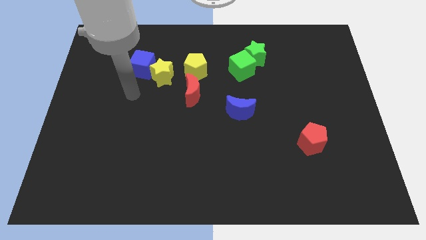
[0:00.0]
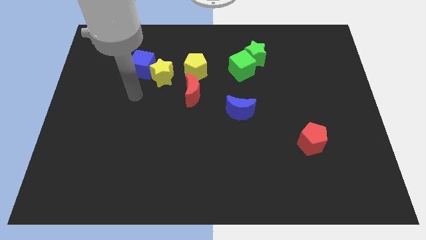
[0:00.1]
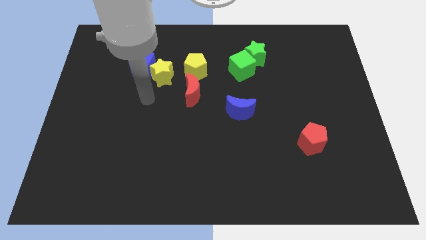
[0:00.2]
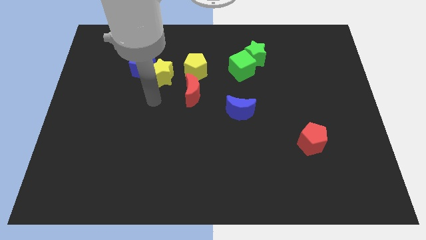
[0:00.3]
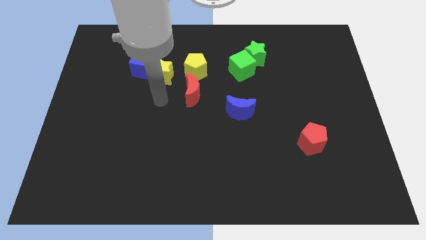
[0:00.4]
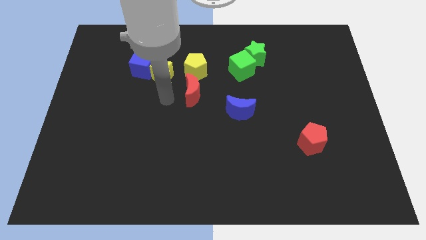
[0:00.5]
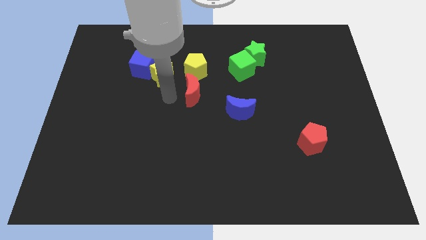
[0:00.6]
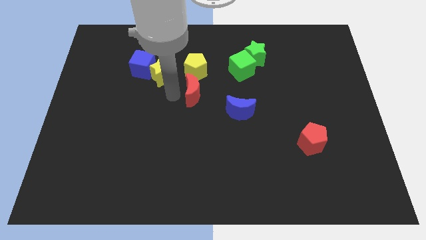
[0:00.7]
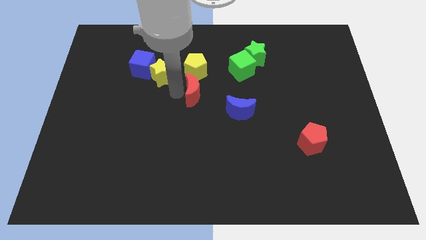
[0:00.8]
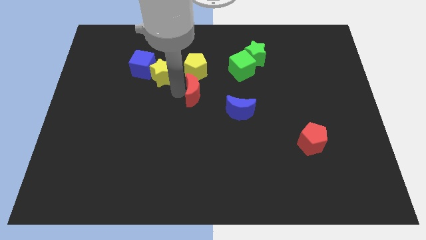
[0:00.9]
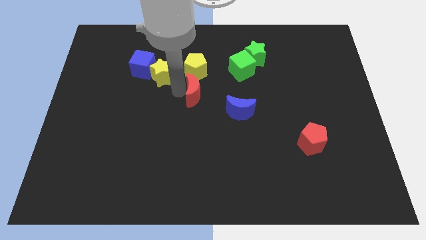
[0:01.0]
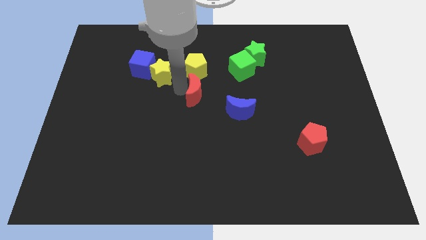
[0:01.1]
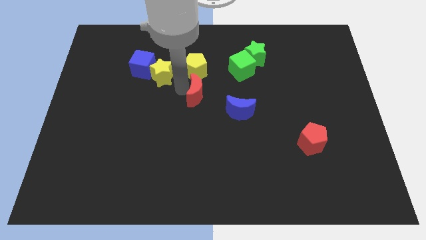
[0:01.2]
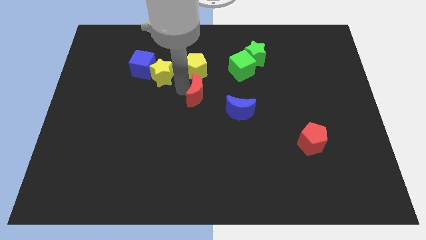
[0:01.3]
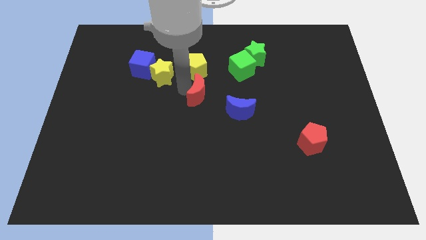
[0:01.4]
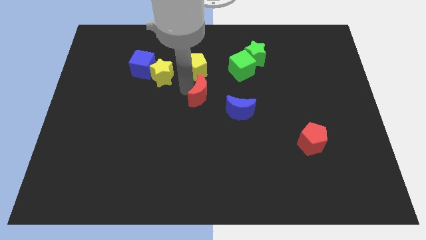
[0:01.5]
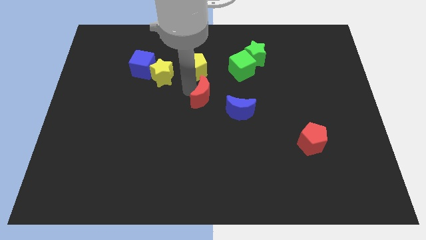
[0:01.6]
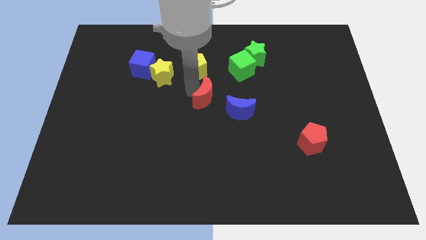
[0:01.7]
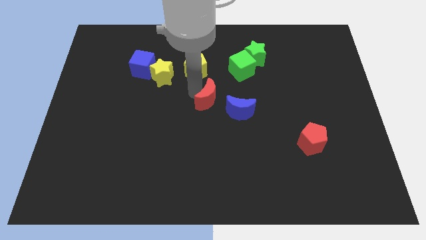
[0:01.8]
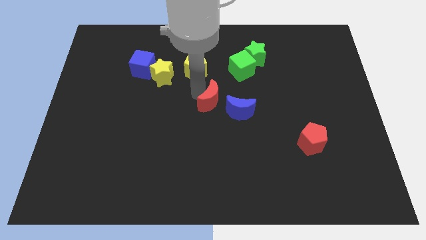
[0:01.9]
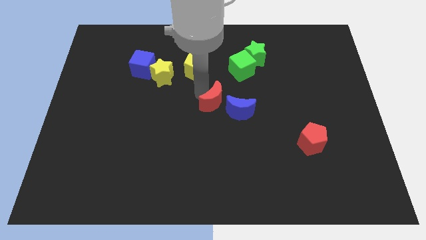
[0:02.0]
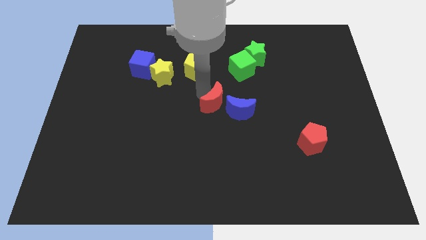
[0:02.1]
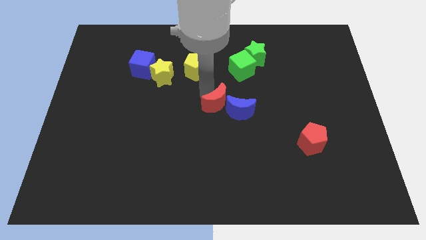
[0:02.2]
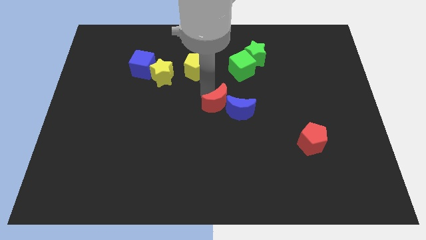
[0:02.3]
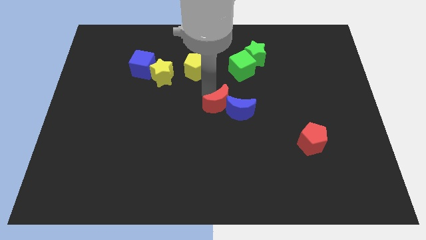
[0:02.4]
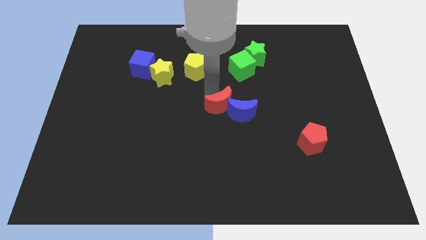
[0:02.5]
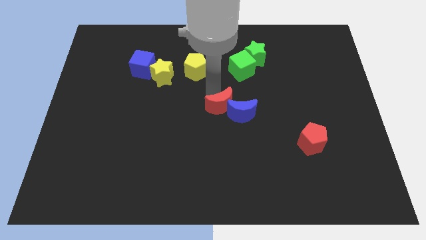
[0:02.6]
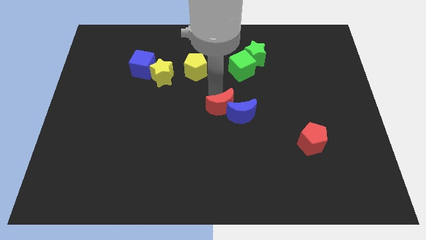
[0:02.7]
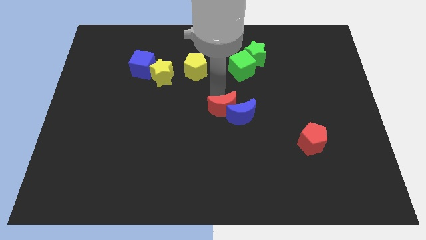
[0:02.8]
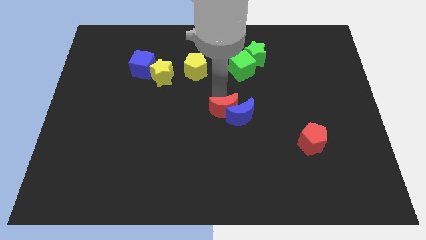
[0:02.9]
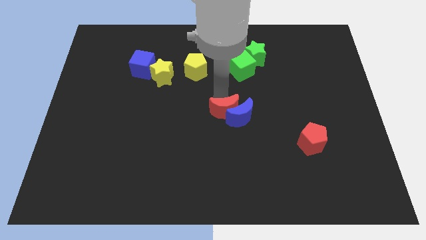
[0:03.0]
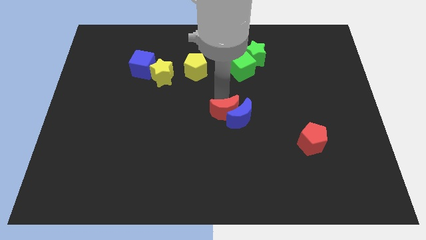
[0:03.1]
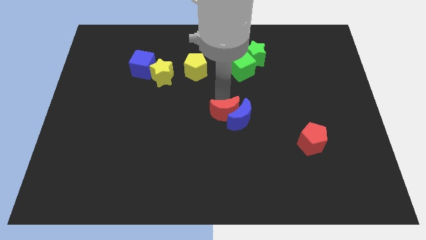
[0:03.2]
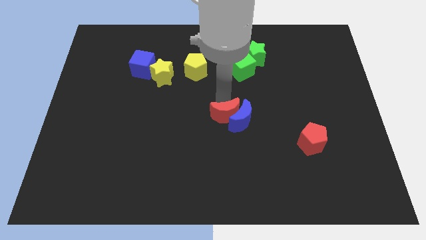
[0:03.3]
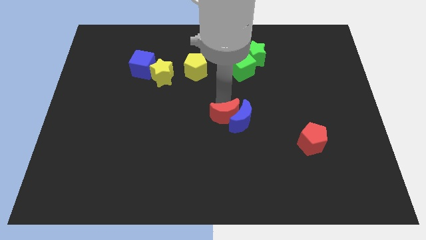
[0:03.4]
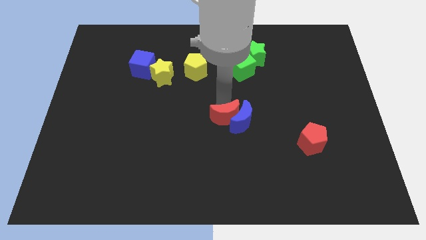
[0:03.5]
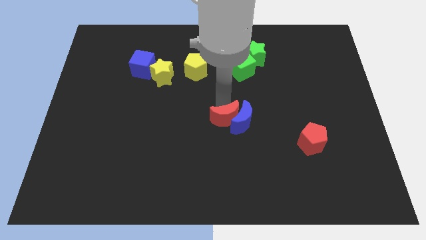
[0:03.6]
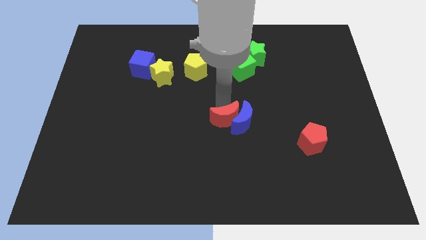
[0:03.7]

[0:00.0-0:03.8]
push the red crescent into the blue crescent

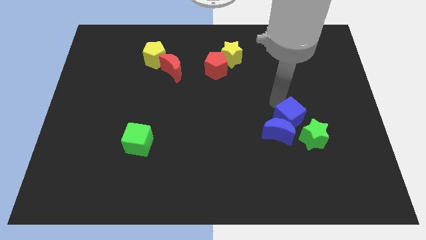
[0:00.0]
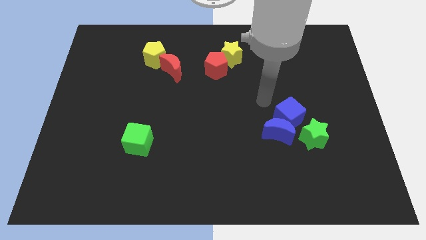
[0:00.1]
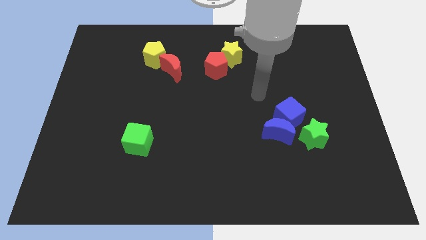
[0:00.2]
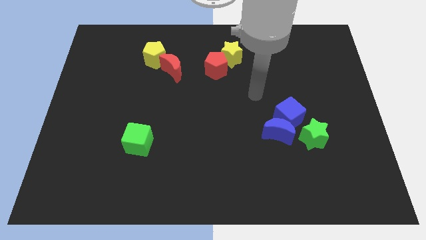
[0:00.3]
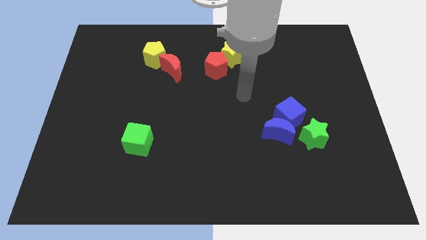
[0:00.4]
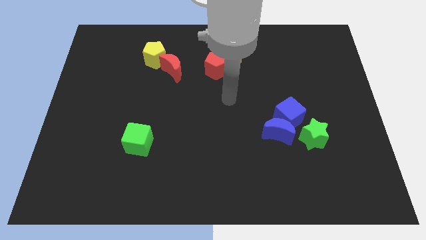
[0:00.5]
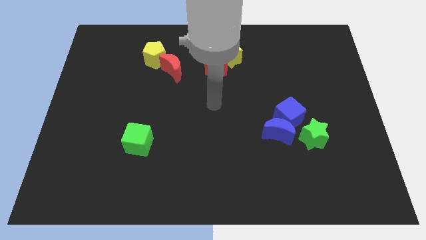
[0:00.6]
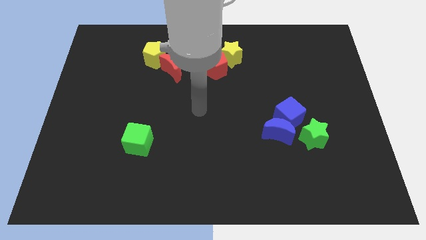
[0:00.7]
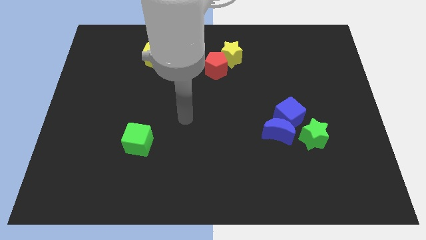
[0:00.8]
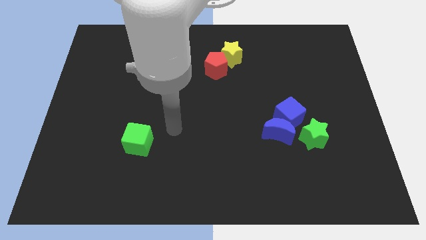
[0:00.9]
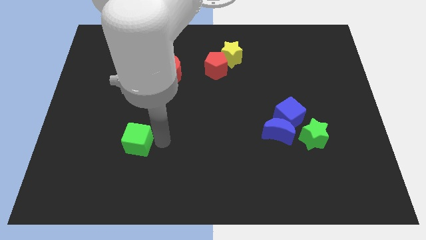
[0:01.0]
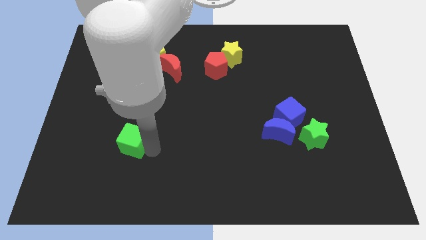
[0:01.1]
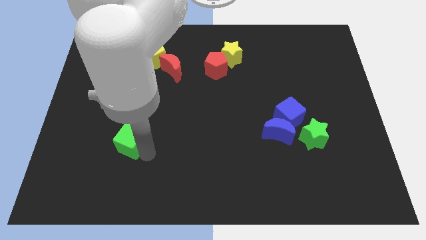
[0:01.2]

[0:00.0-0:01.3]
touch the right side of the green cube

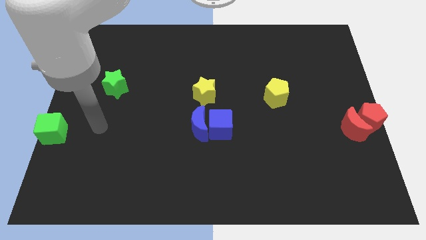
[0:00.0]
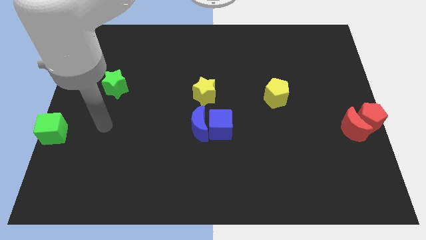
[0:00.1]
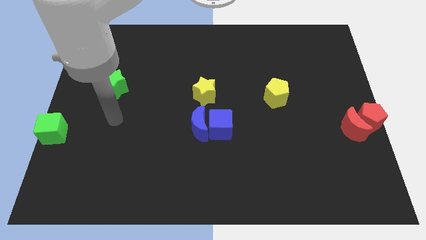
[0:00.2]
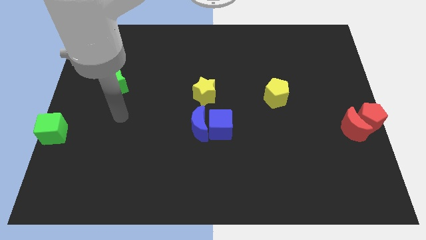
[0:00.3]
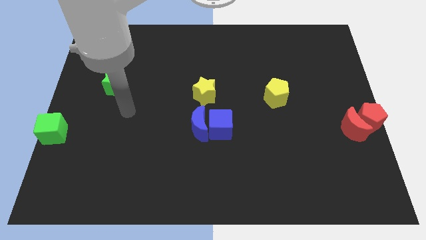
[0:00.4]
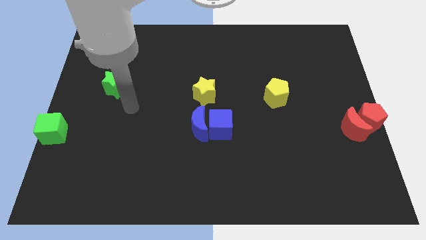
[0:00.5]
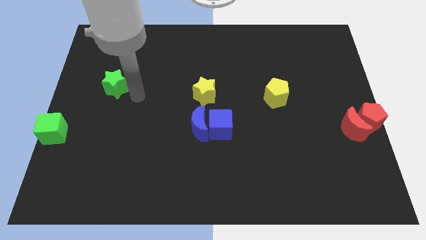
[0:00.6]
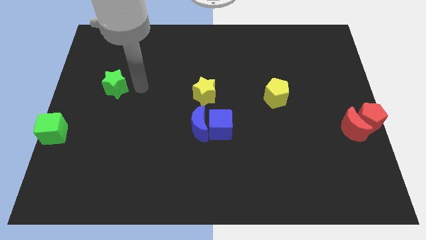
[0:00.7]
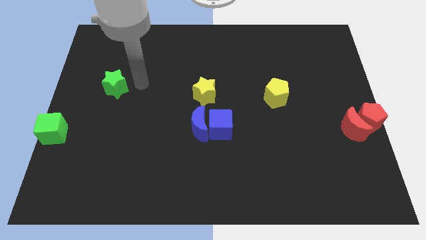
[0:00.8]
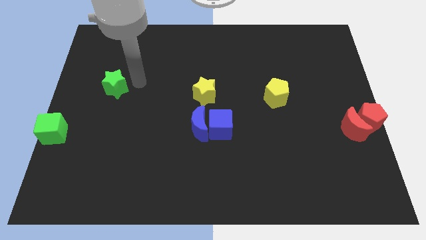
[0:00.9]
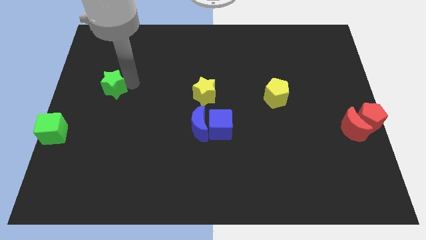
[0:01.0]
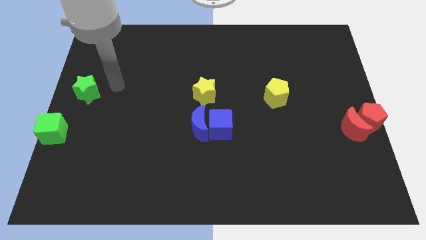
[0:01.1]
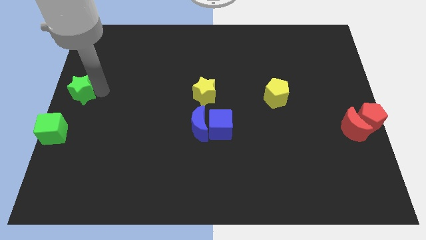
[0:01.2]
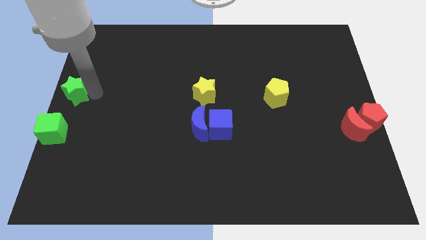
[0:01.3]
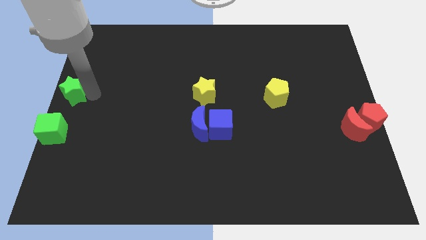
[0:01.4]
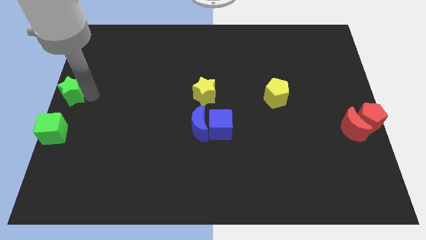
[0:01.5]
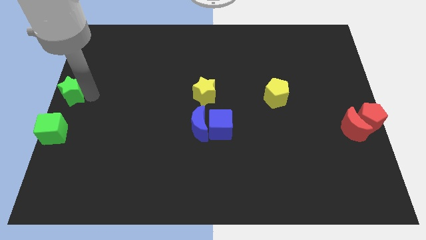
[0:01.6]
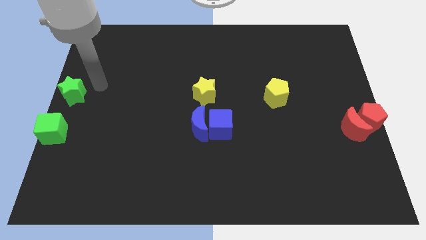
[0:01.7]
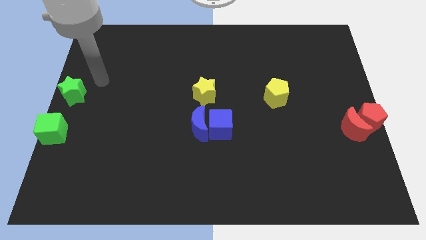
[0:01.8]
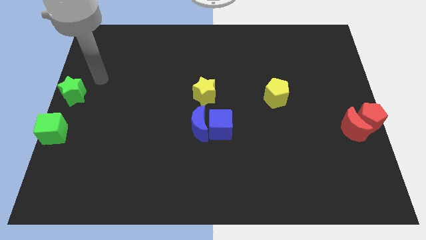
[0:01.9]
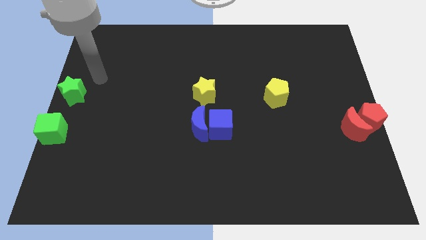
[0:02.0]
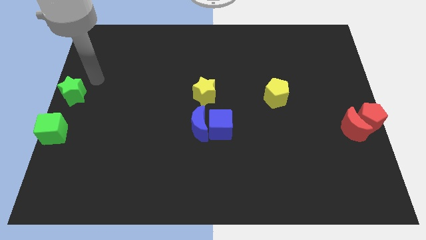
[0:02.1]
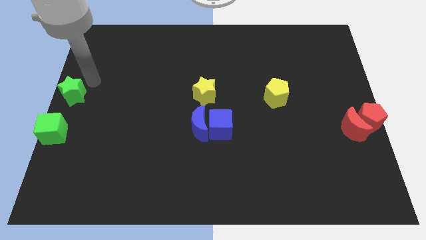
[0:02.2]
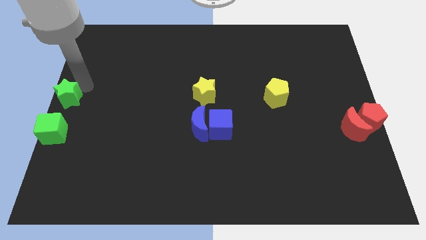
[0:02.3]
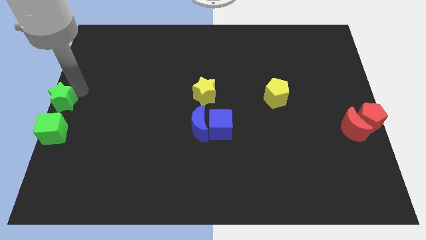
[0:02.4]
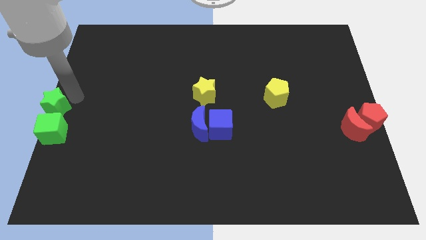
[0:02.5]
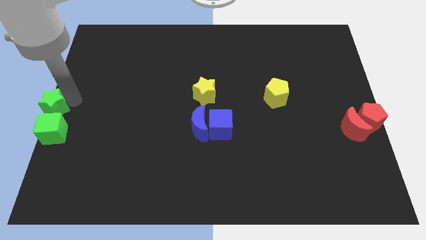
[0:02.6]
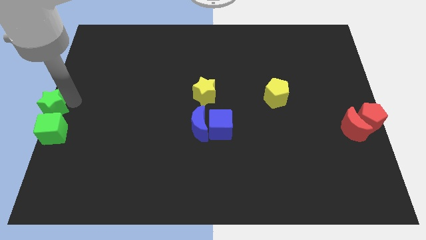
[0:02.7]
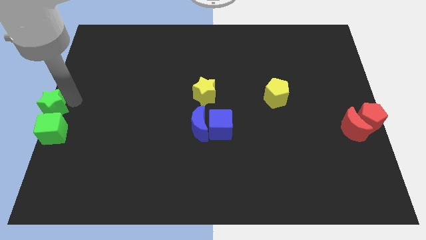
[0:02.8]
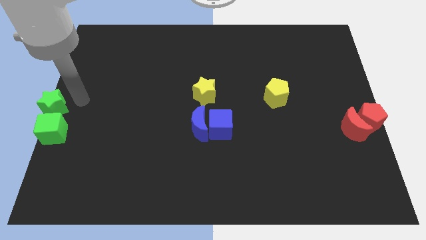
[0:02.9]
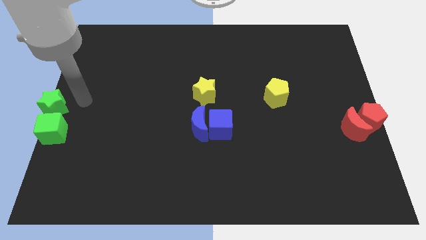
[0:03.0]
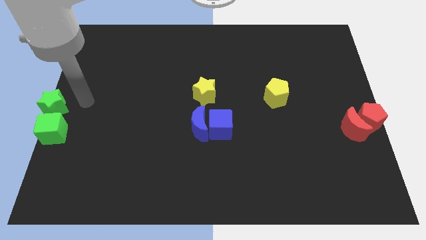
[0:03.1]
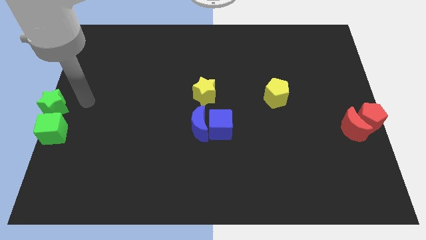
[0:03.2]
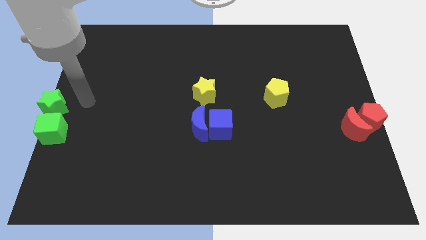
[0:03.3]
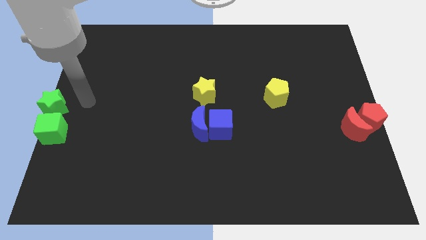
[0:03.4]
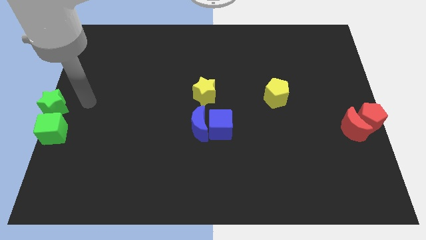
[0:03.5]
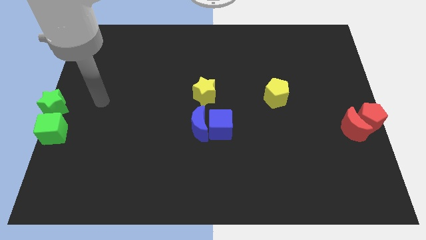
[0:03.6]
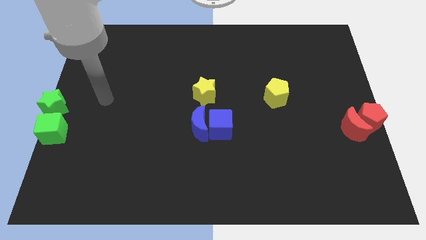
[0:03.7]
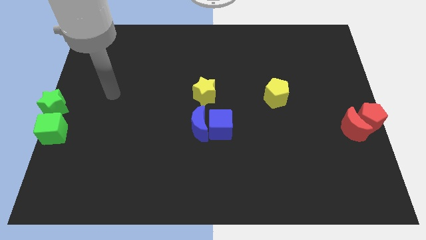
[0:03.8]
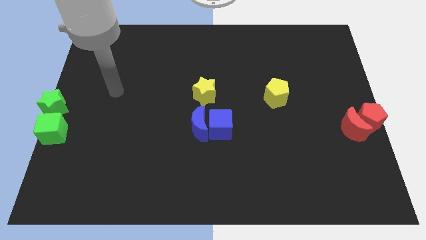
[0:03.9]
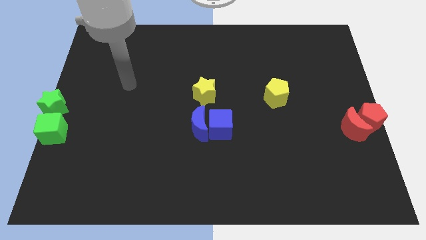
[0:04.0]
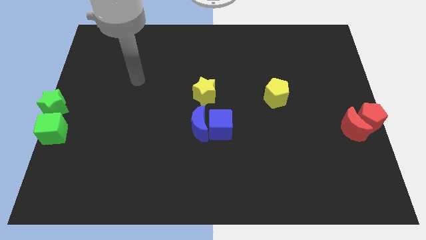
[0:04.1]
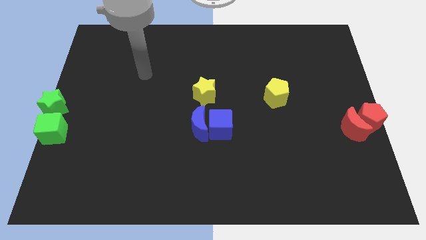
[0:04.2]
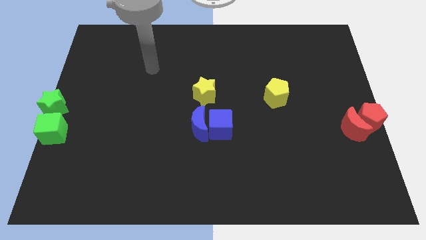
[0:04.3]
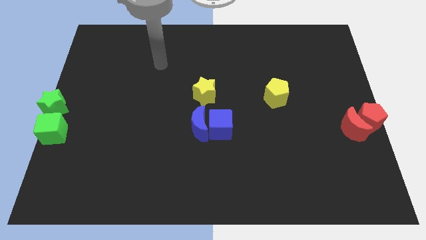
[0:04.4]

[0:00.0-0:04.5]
move the green star towards the top of the green cube
